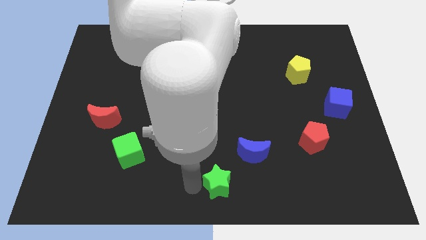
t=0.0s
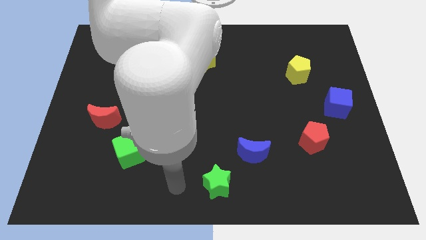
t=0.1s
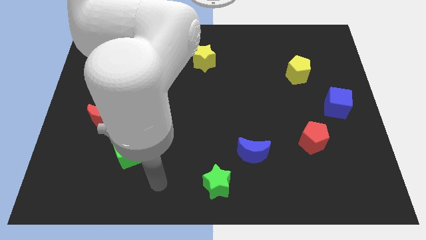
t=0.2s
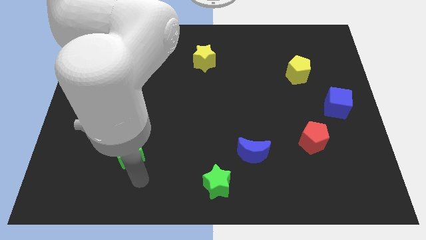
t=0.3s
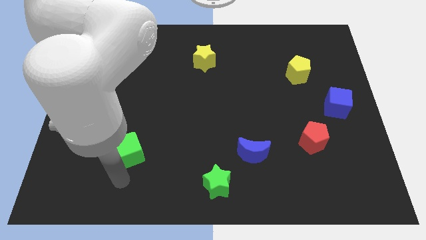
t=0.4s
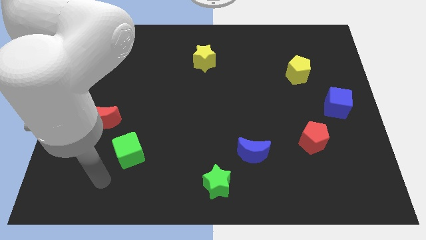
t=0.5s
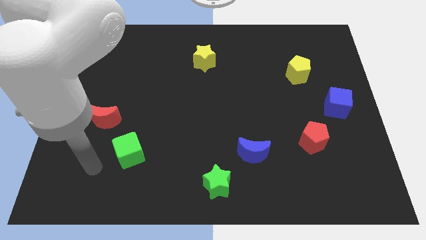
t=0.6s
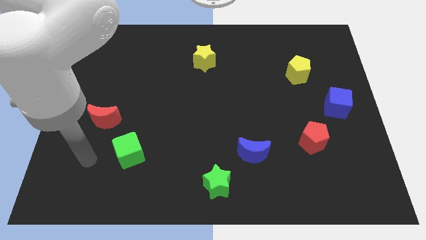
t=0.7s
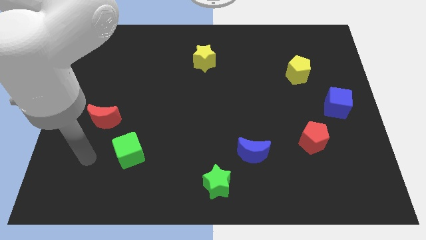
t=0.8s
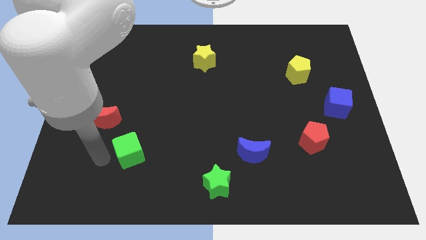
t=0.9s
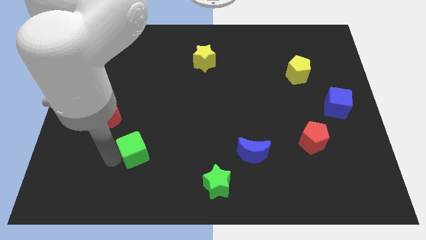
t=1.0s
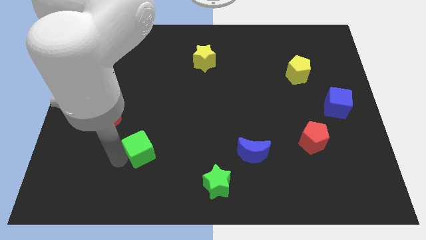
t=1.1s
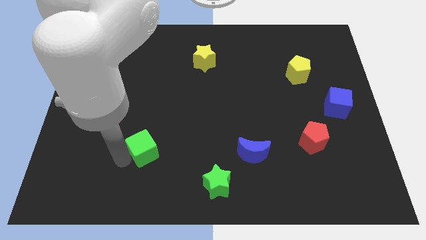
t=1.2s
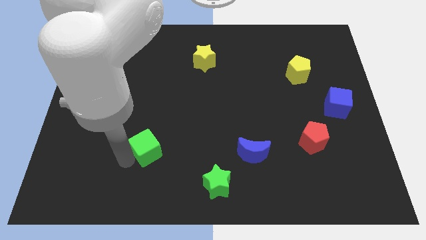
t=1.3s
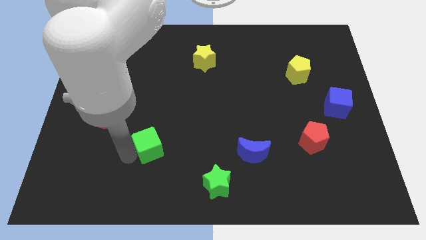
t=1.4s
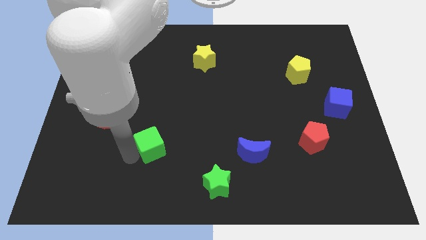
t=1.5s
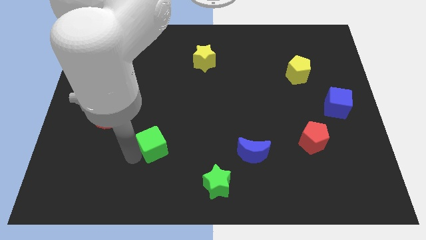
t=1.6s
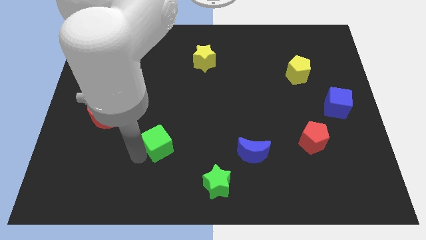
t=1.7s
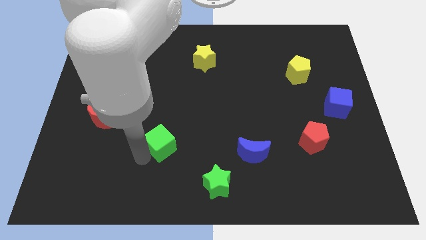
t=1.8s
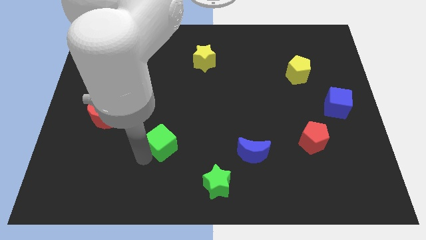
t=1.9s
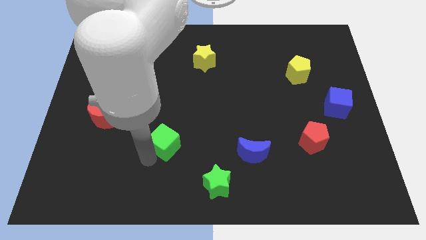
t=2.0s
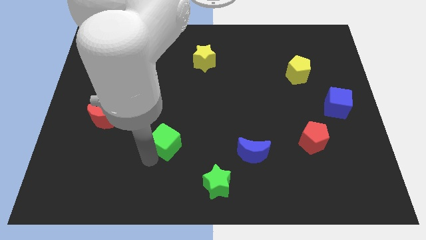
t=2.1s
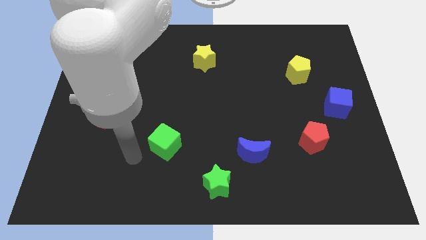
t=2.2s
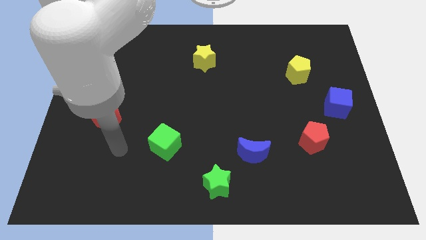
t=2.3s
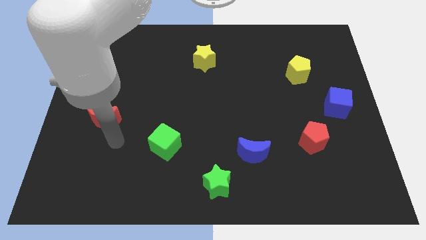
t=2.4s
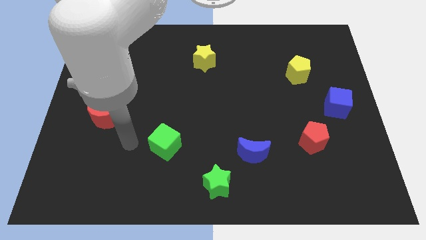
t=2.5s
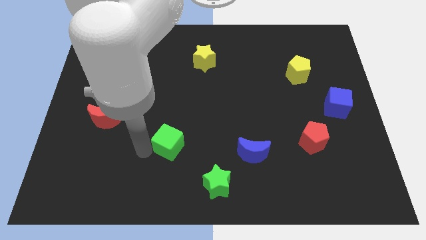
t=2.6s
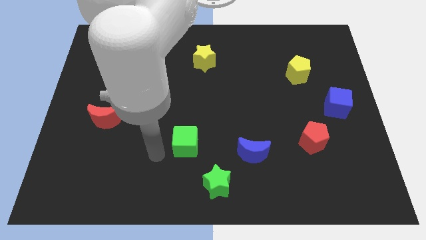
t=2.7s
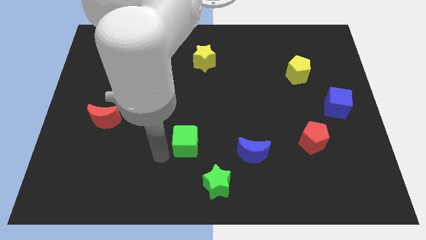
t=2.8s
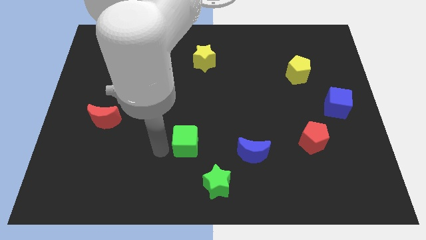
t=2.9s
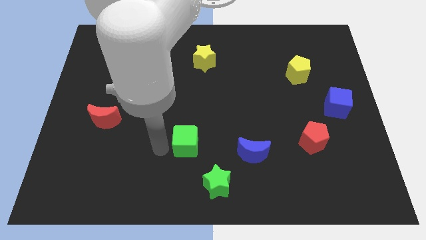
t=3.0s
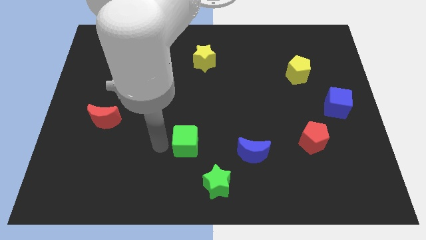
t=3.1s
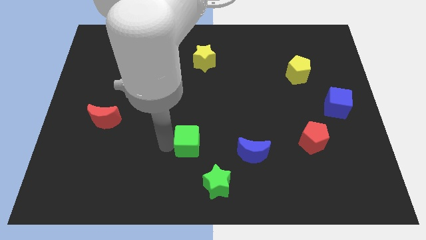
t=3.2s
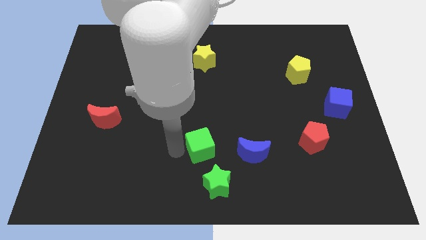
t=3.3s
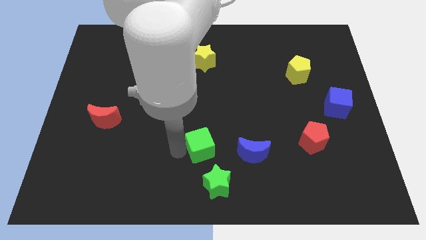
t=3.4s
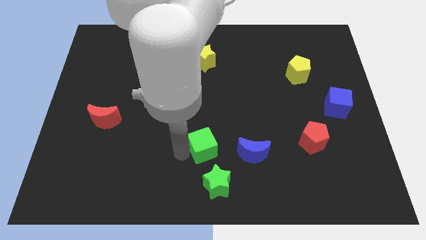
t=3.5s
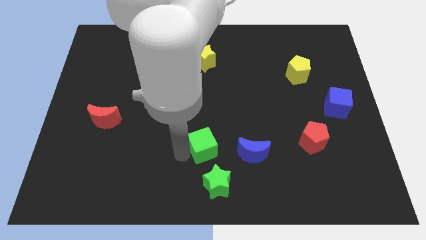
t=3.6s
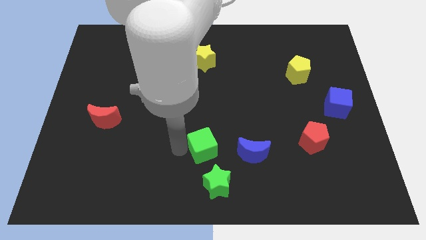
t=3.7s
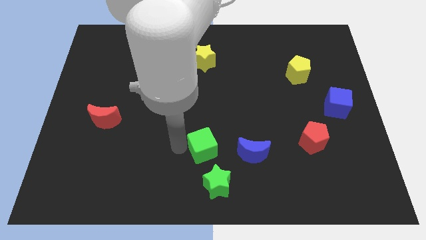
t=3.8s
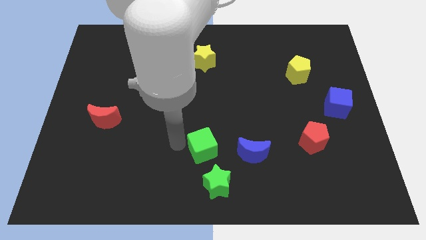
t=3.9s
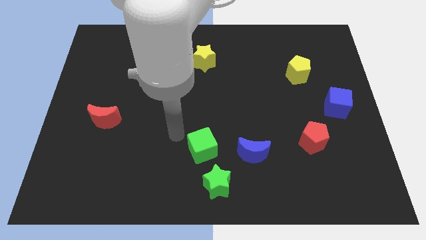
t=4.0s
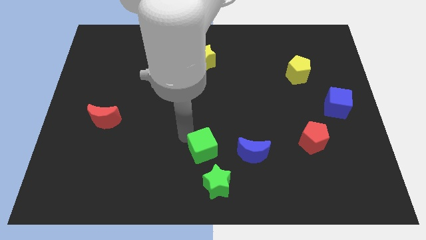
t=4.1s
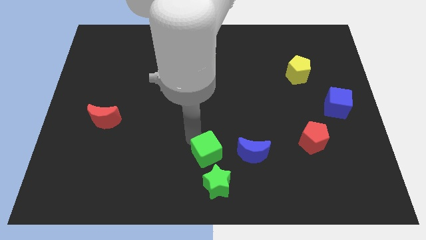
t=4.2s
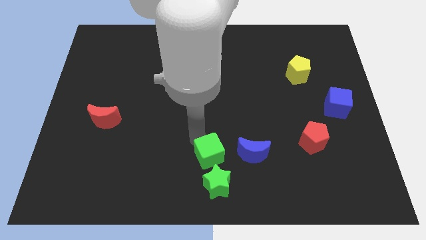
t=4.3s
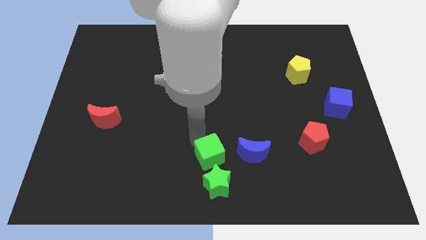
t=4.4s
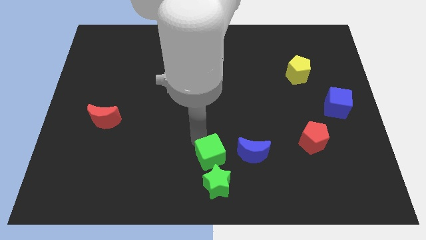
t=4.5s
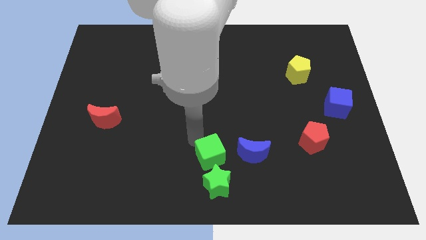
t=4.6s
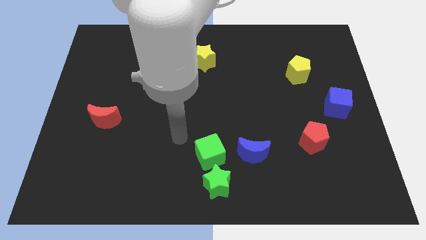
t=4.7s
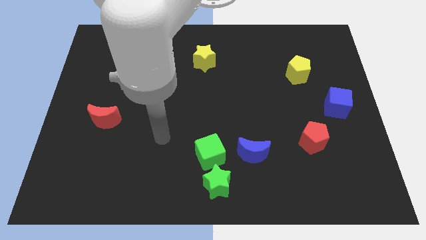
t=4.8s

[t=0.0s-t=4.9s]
move the green cube to the top side of the green star

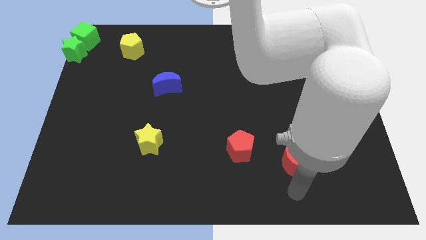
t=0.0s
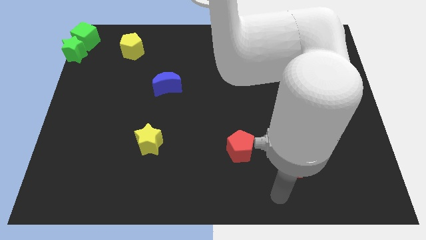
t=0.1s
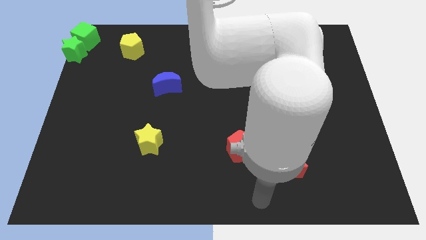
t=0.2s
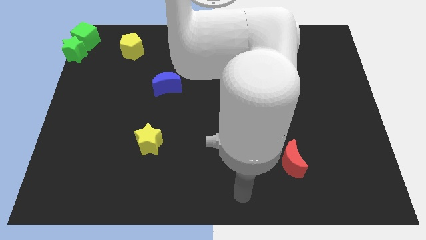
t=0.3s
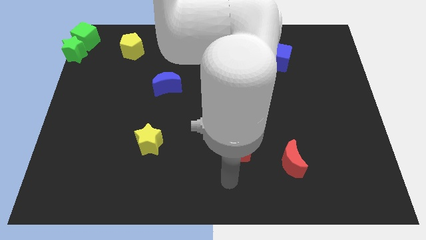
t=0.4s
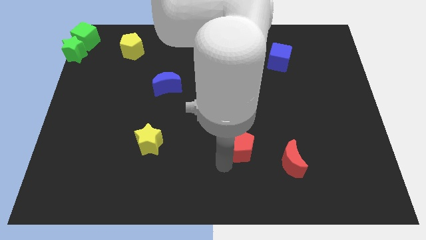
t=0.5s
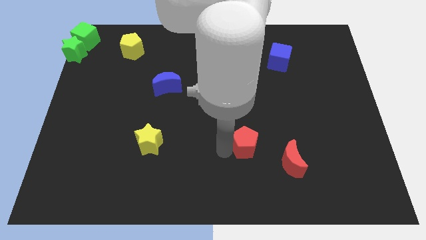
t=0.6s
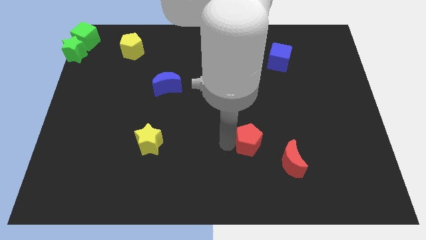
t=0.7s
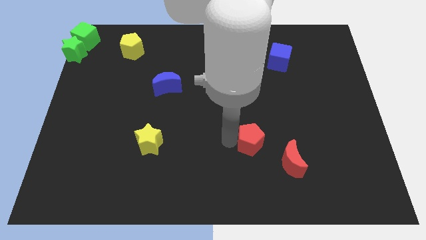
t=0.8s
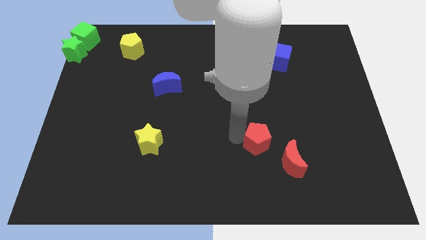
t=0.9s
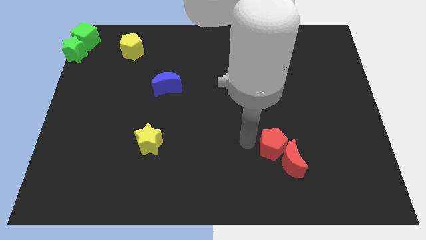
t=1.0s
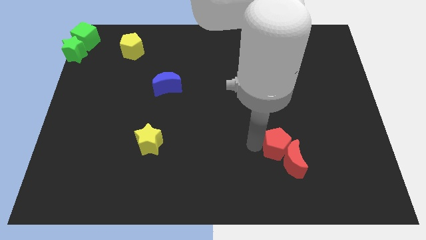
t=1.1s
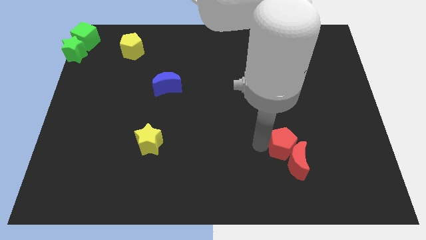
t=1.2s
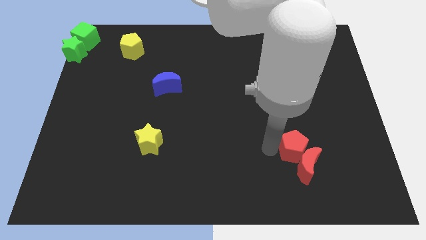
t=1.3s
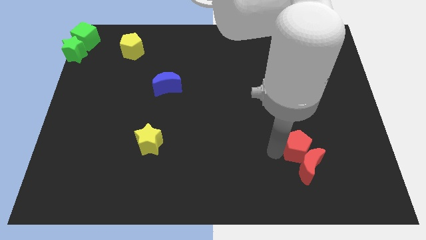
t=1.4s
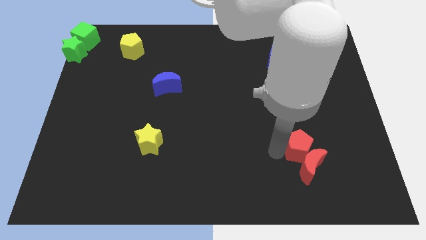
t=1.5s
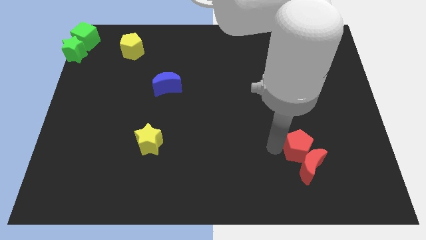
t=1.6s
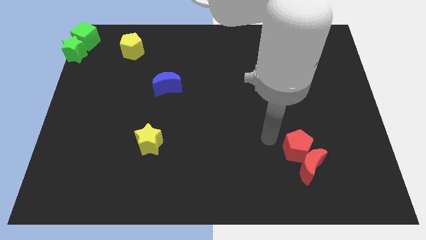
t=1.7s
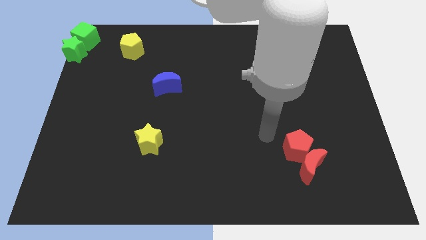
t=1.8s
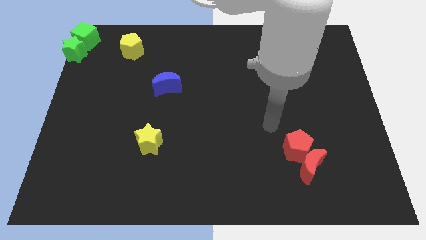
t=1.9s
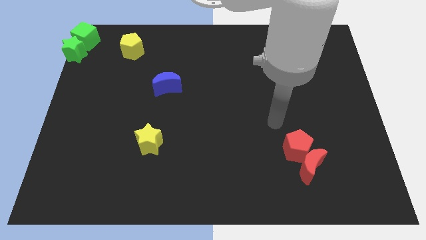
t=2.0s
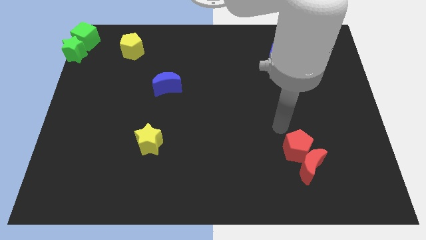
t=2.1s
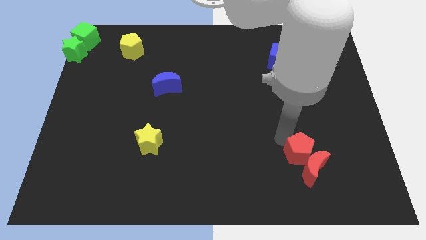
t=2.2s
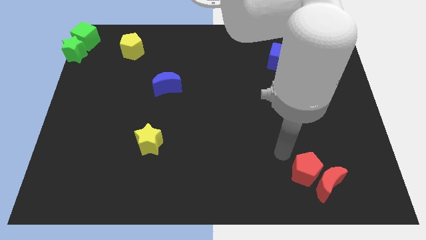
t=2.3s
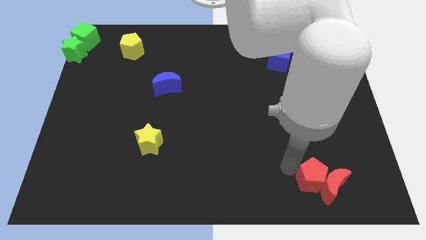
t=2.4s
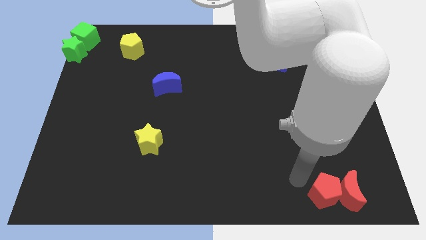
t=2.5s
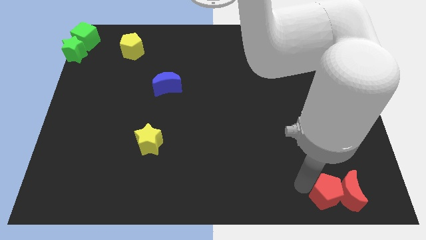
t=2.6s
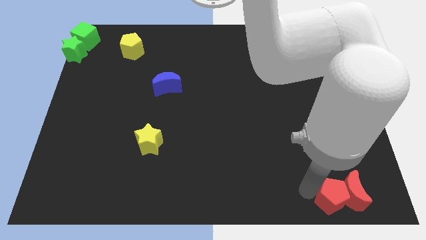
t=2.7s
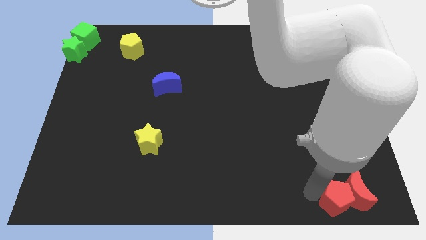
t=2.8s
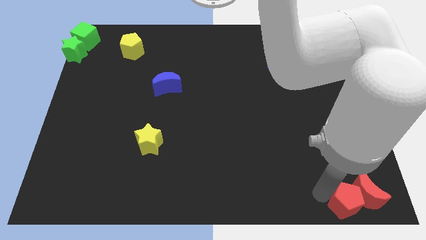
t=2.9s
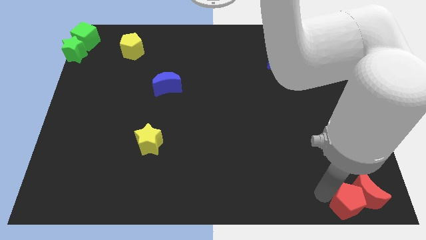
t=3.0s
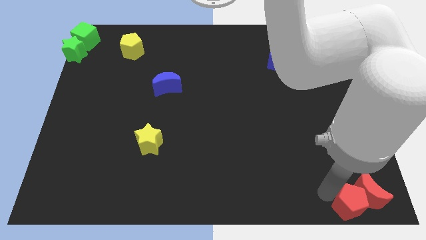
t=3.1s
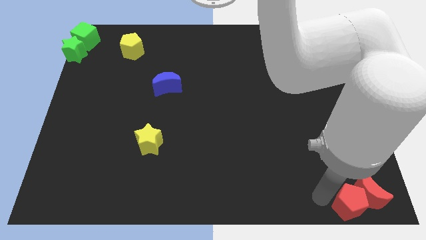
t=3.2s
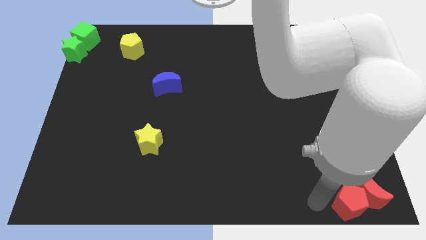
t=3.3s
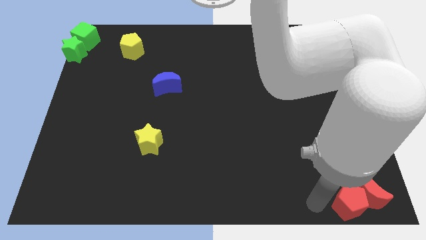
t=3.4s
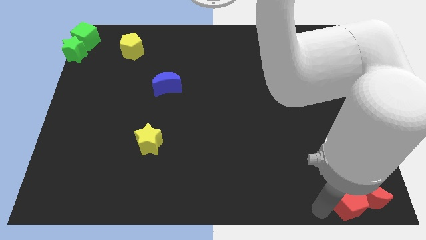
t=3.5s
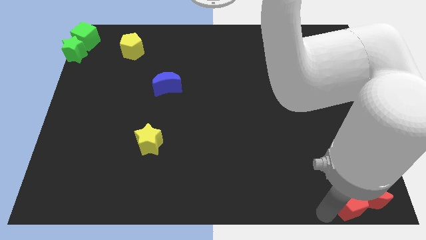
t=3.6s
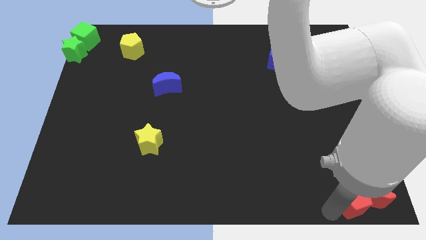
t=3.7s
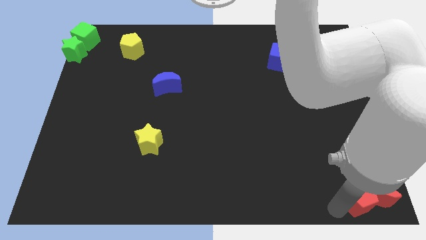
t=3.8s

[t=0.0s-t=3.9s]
move the red pentagon along with the red crescent to the bottom right corner

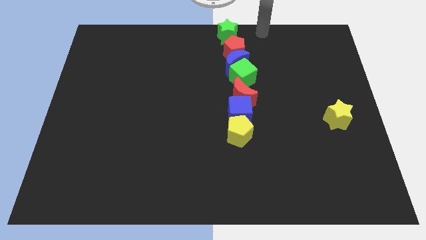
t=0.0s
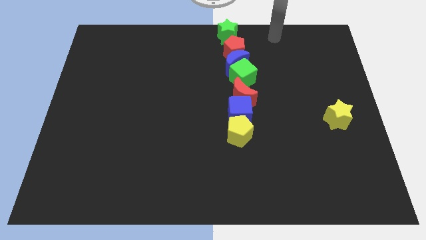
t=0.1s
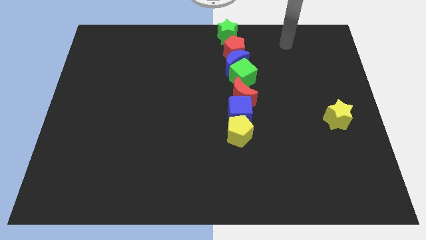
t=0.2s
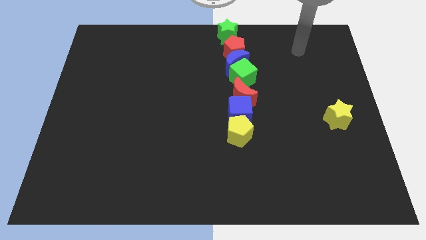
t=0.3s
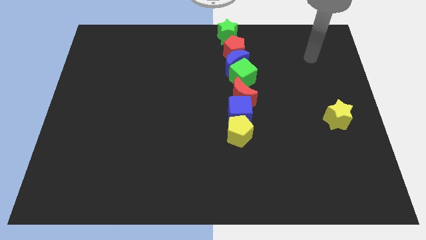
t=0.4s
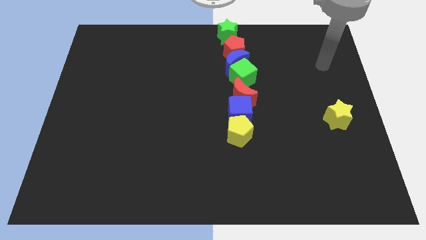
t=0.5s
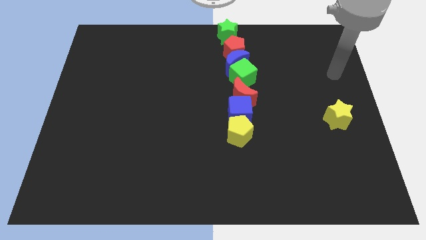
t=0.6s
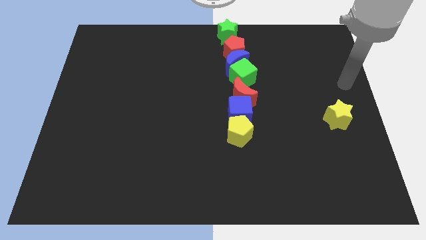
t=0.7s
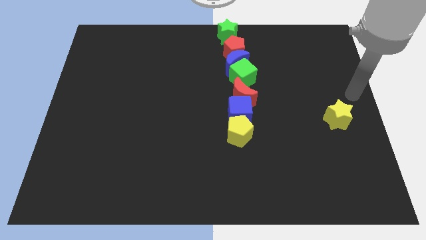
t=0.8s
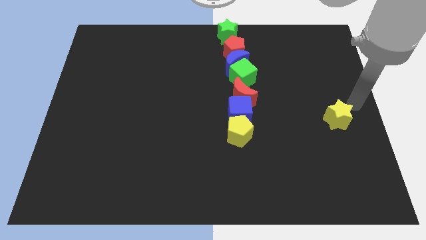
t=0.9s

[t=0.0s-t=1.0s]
move the arm towards the top right of the yellow star
